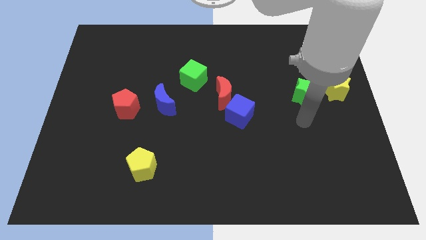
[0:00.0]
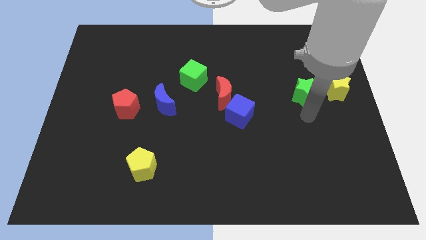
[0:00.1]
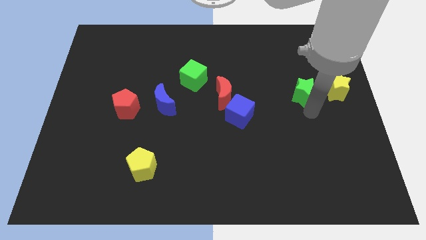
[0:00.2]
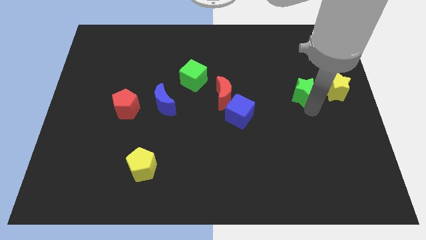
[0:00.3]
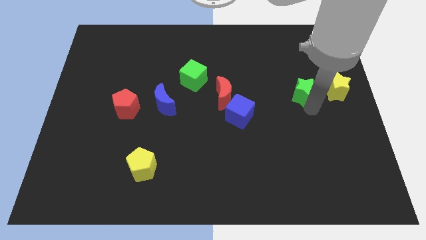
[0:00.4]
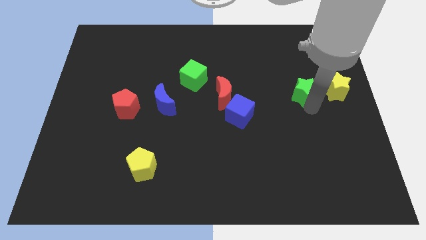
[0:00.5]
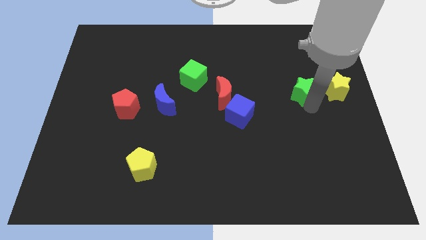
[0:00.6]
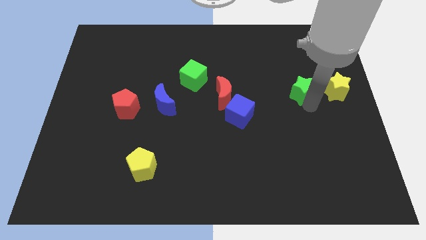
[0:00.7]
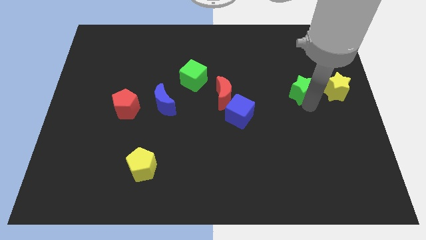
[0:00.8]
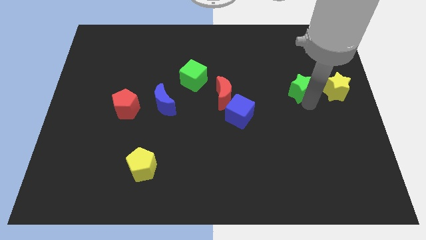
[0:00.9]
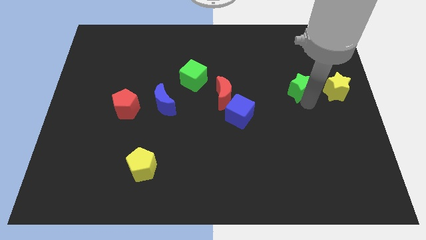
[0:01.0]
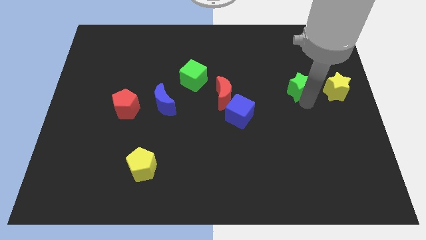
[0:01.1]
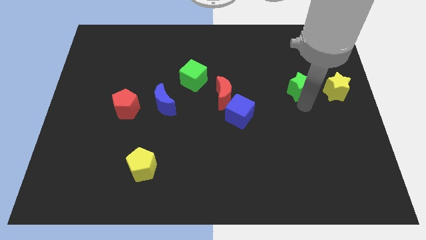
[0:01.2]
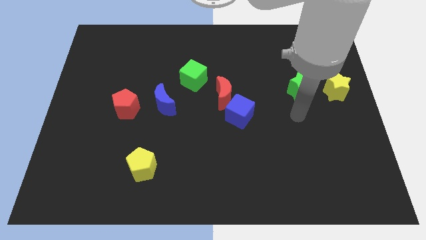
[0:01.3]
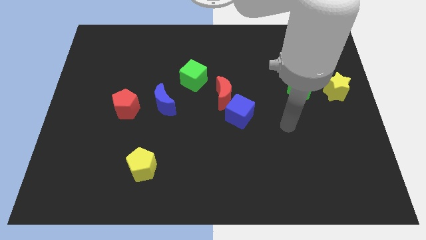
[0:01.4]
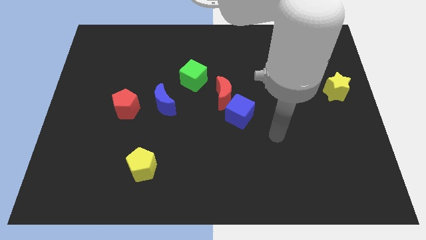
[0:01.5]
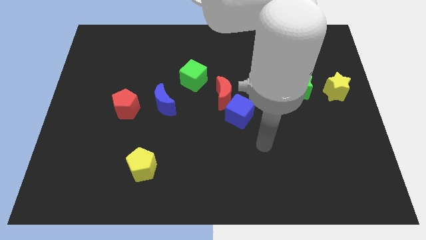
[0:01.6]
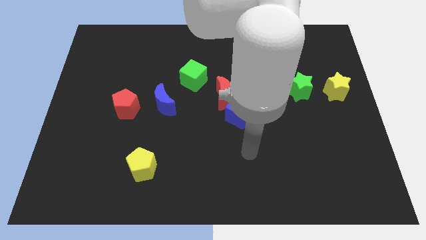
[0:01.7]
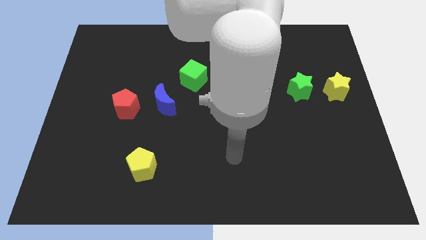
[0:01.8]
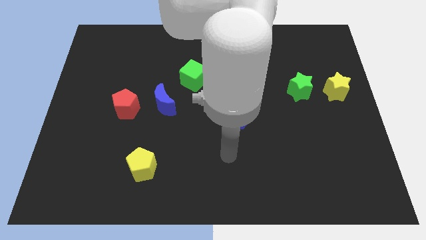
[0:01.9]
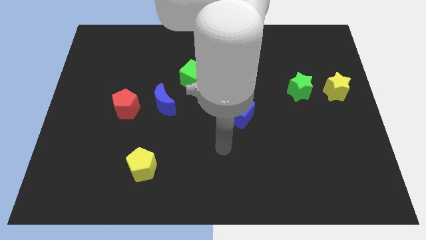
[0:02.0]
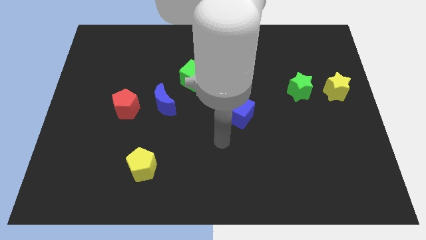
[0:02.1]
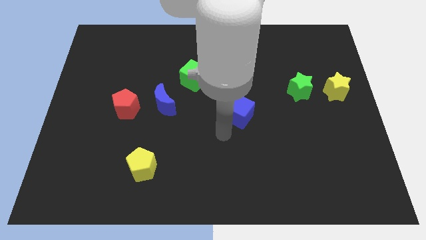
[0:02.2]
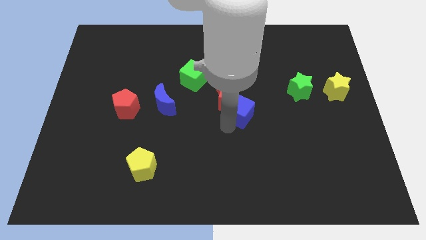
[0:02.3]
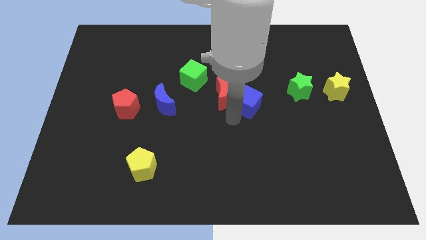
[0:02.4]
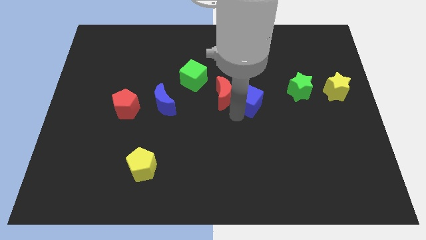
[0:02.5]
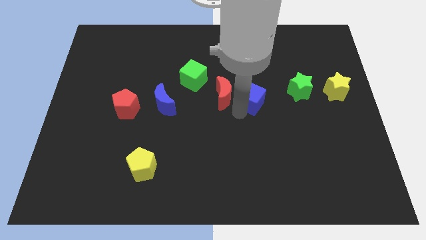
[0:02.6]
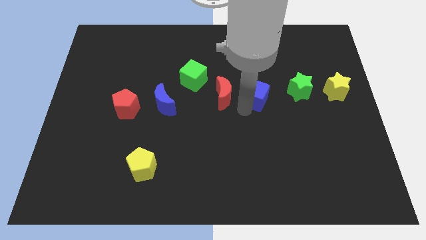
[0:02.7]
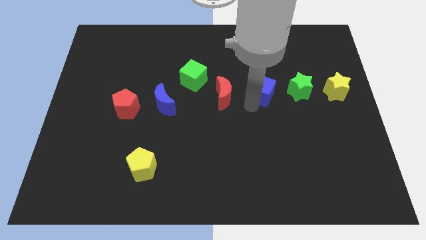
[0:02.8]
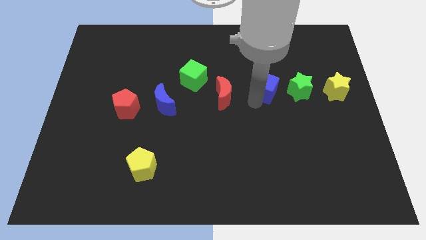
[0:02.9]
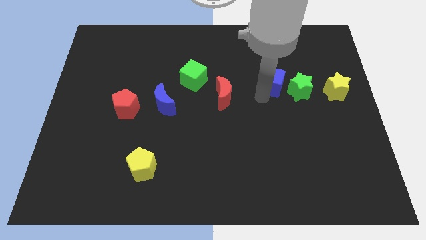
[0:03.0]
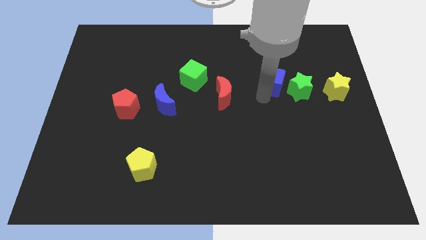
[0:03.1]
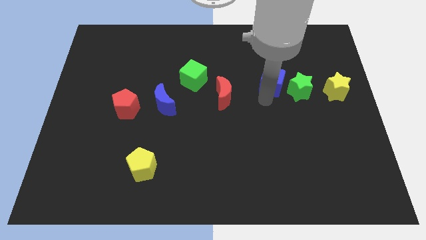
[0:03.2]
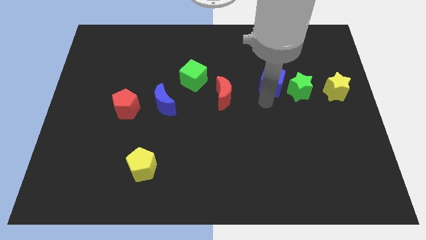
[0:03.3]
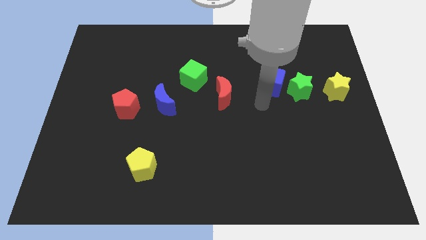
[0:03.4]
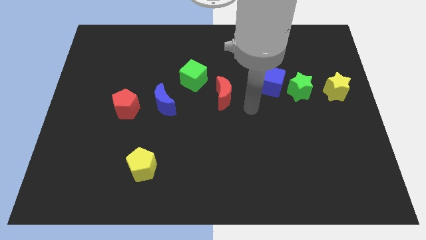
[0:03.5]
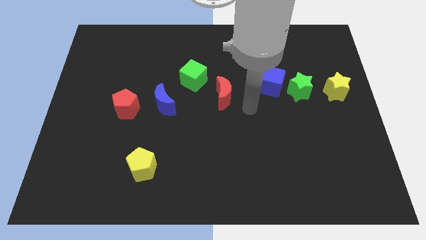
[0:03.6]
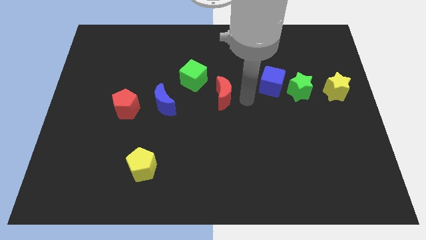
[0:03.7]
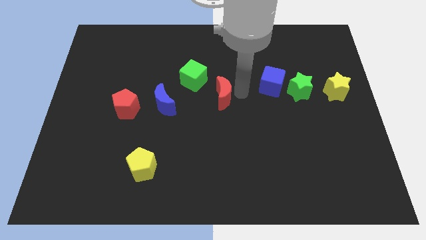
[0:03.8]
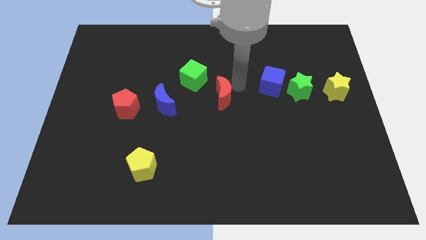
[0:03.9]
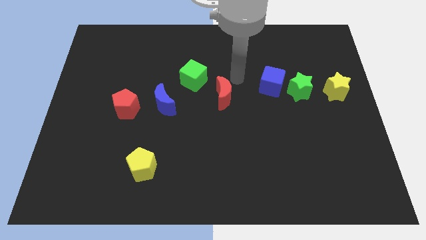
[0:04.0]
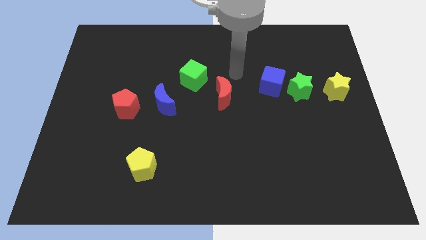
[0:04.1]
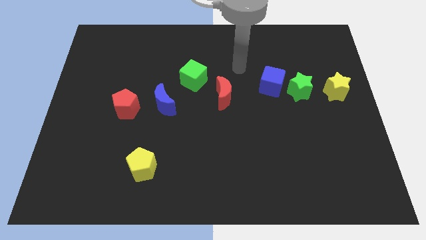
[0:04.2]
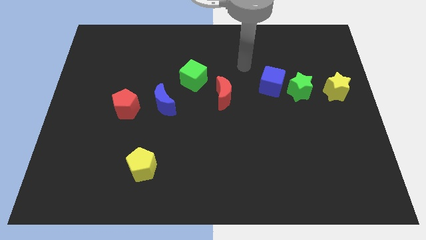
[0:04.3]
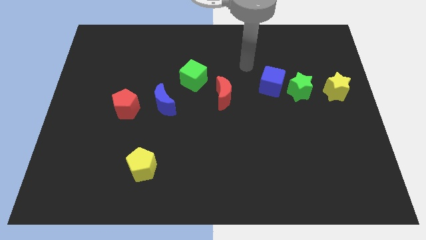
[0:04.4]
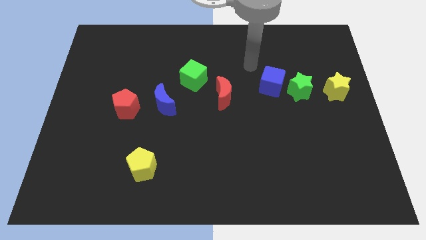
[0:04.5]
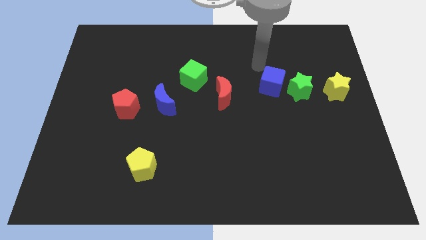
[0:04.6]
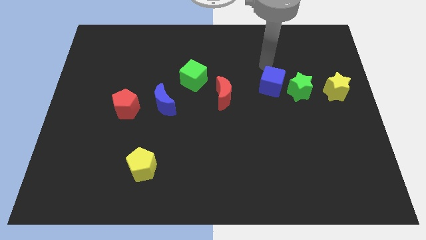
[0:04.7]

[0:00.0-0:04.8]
move the blue cube in between the green star and red moon

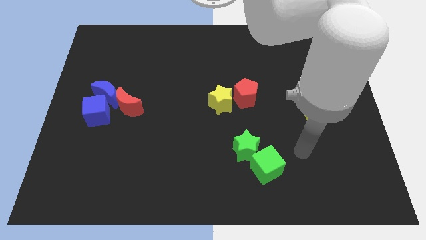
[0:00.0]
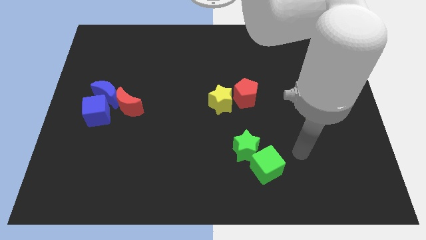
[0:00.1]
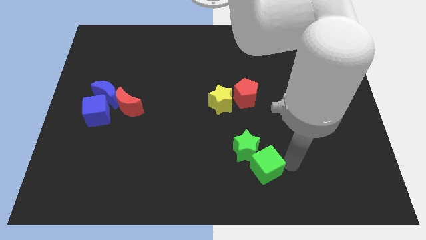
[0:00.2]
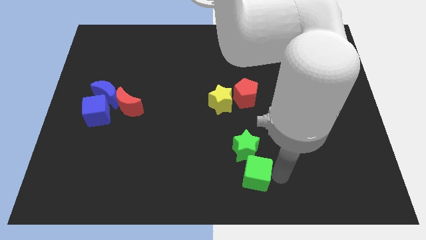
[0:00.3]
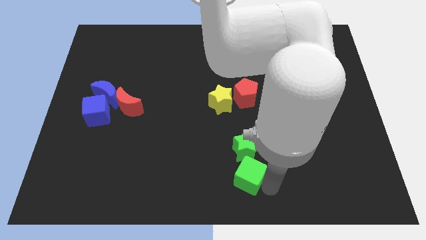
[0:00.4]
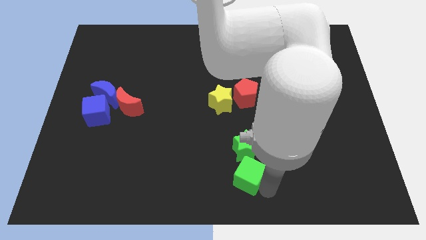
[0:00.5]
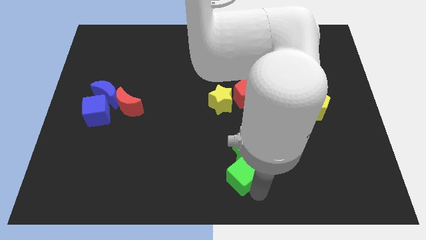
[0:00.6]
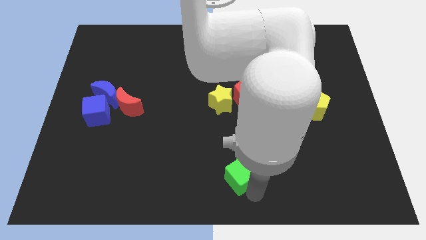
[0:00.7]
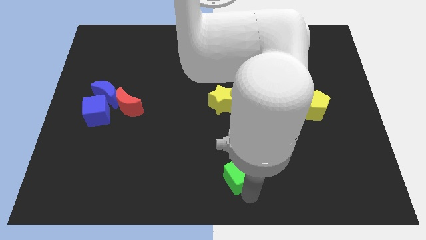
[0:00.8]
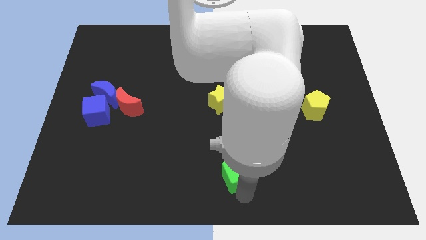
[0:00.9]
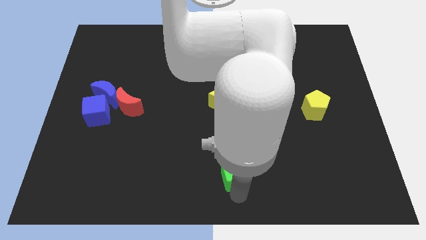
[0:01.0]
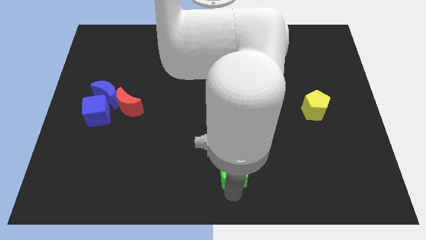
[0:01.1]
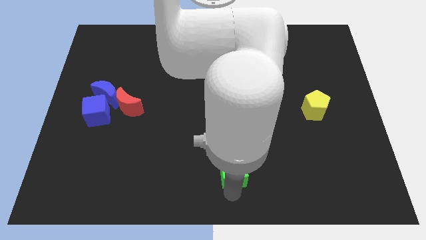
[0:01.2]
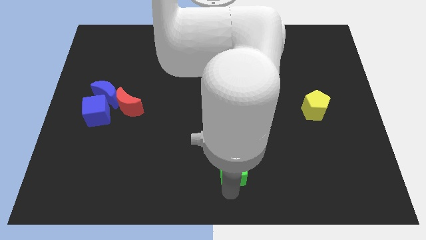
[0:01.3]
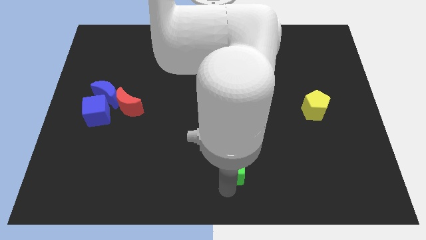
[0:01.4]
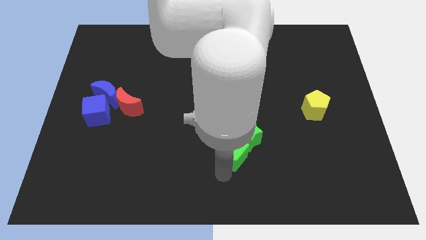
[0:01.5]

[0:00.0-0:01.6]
push the green cube into the green star

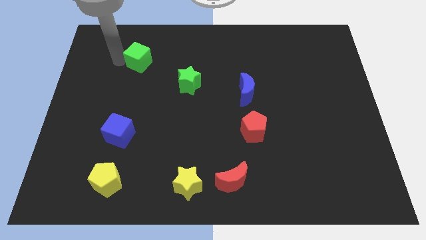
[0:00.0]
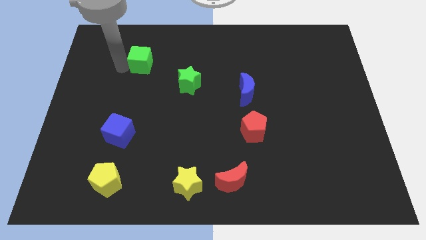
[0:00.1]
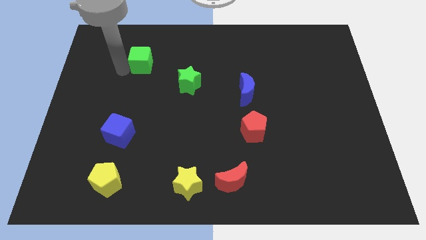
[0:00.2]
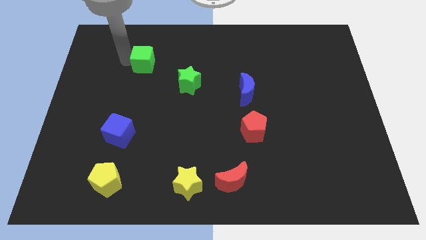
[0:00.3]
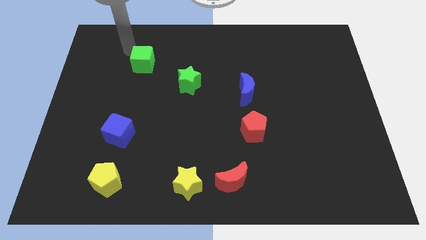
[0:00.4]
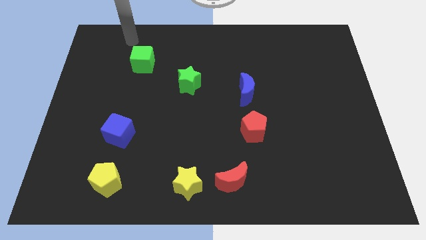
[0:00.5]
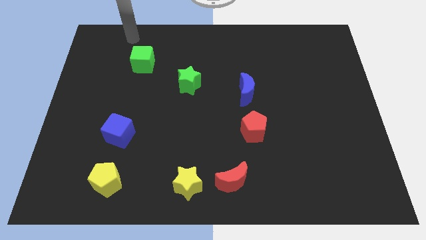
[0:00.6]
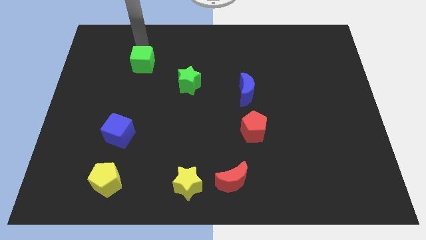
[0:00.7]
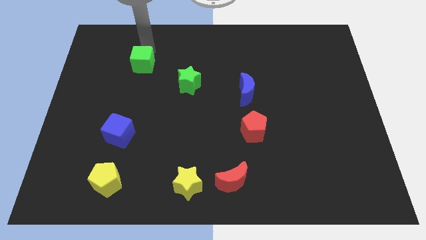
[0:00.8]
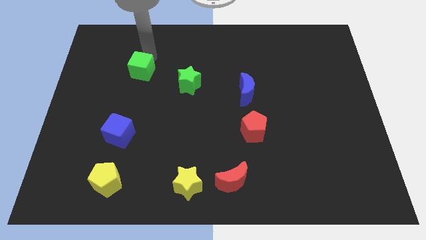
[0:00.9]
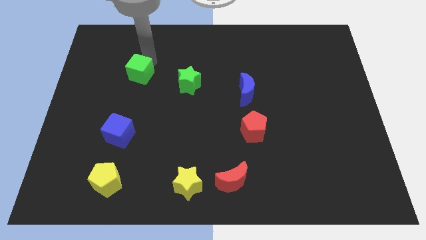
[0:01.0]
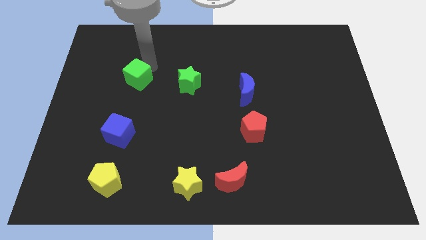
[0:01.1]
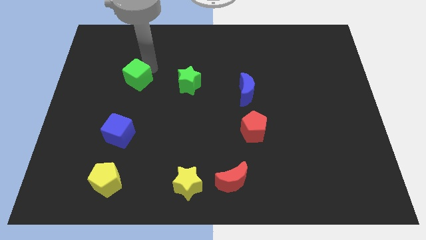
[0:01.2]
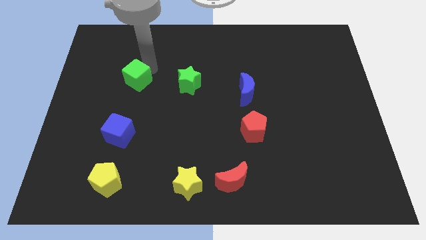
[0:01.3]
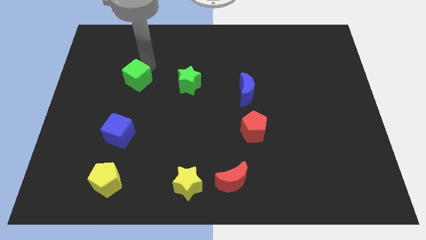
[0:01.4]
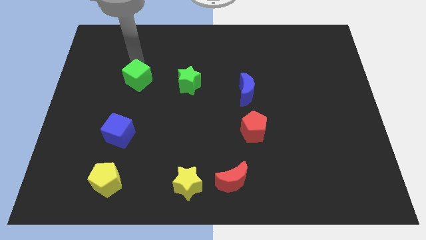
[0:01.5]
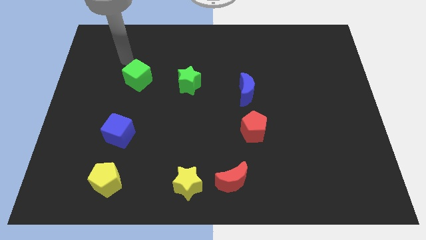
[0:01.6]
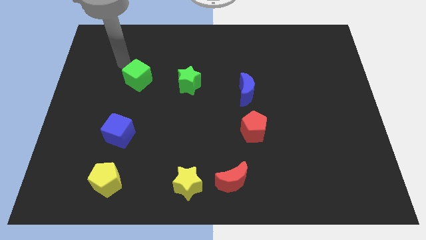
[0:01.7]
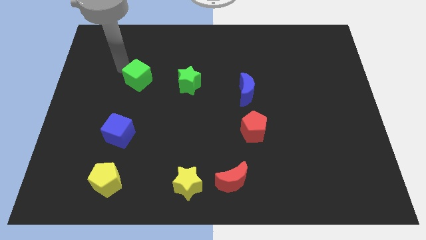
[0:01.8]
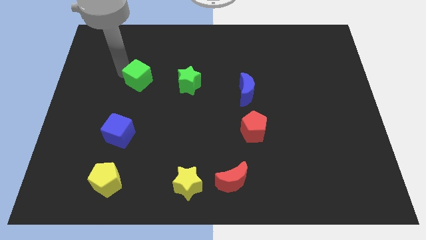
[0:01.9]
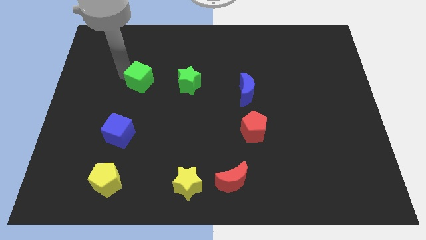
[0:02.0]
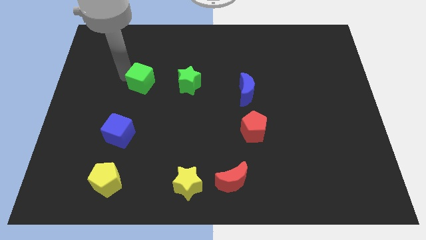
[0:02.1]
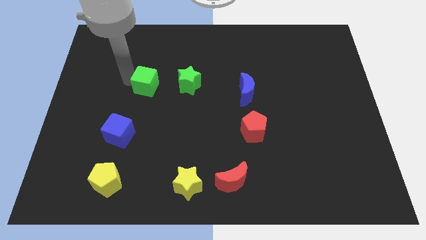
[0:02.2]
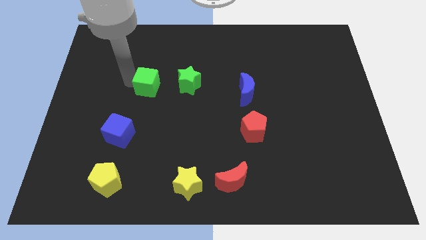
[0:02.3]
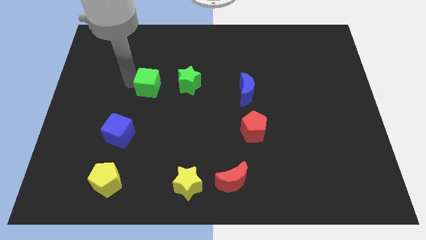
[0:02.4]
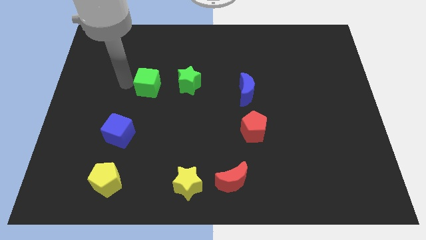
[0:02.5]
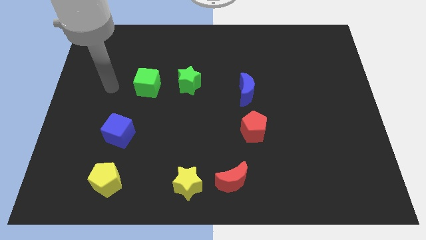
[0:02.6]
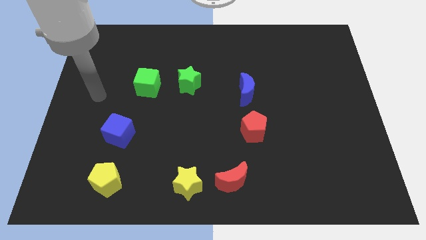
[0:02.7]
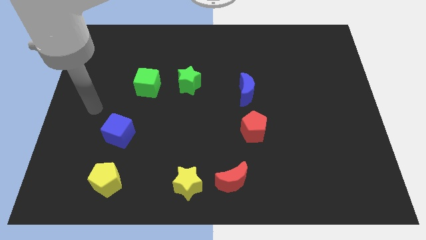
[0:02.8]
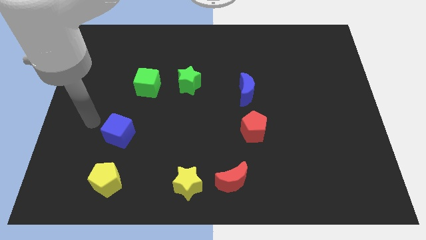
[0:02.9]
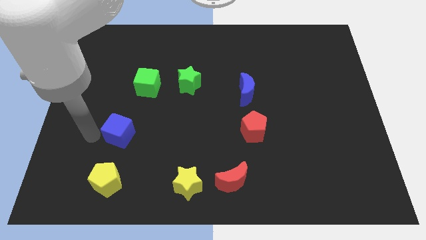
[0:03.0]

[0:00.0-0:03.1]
place green cube to the left of green star
